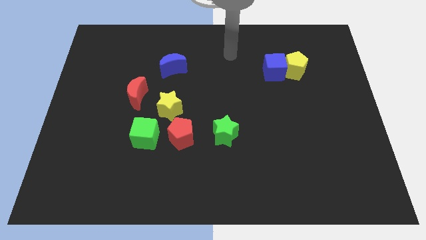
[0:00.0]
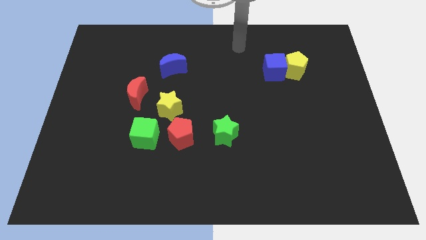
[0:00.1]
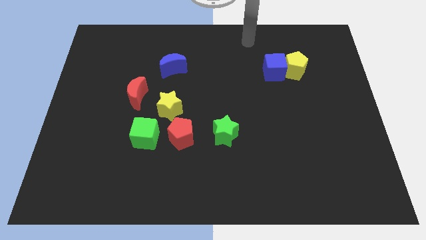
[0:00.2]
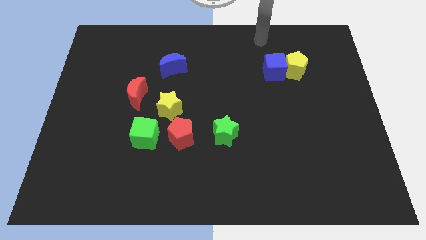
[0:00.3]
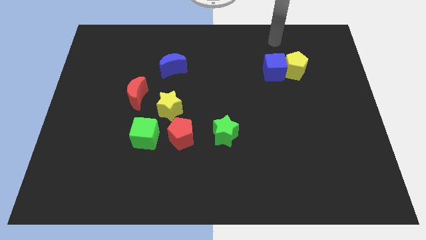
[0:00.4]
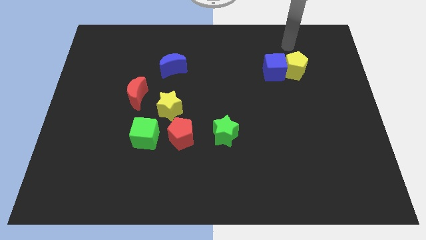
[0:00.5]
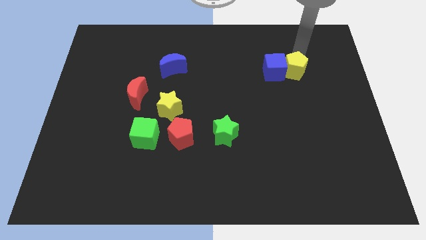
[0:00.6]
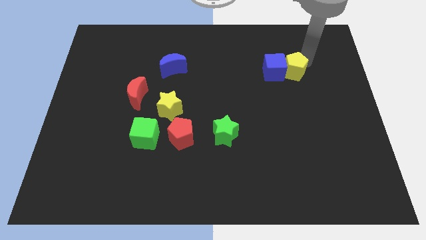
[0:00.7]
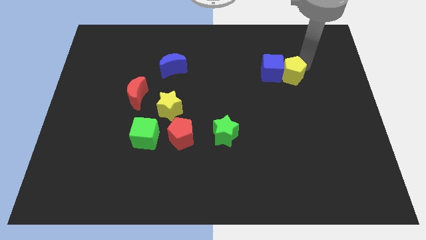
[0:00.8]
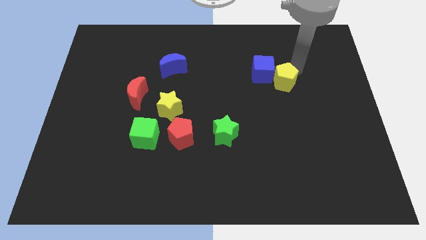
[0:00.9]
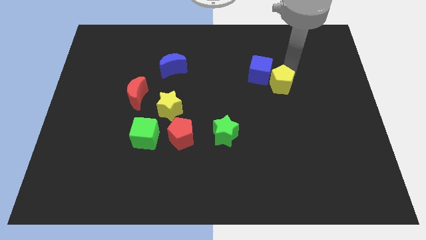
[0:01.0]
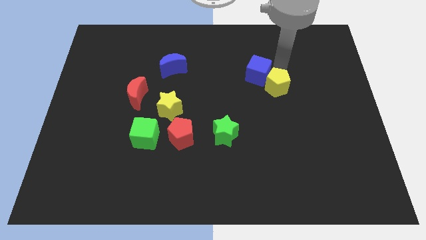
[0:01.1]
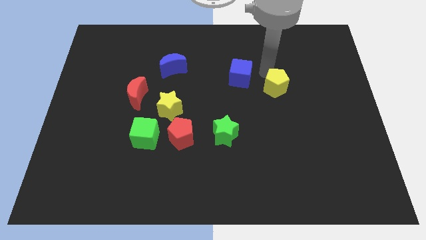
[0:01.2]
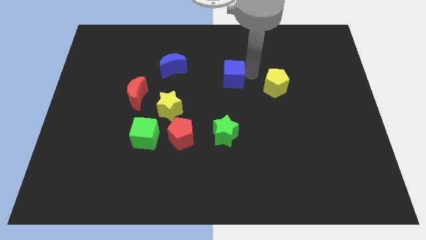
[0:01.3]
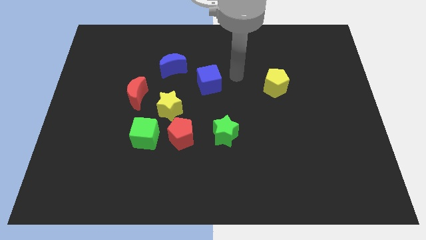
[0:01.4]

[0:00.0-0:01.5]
move the blue cube to the bottom right of the blue moon

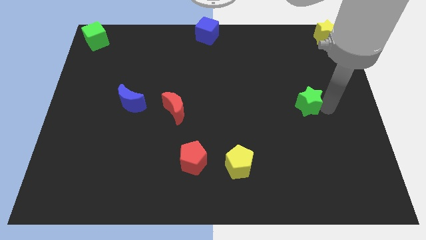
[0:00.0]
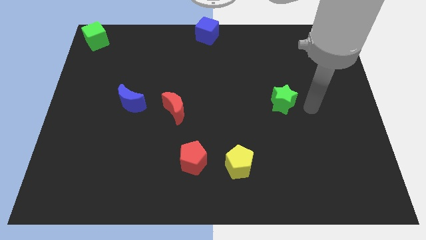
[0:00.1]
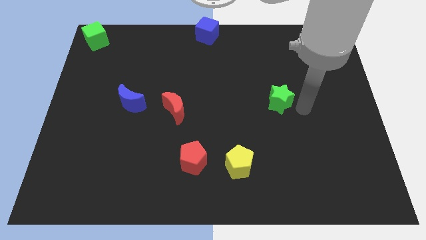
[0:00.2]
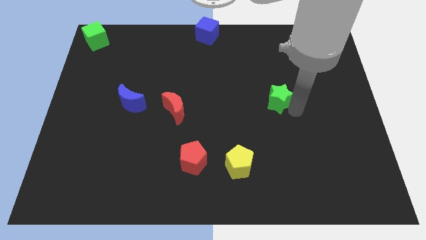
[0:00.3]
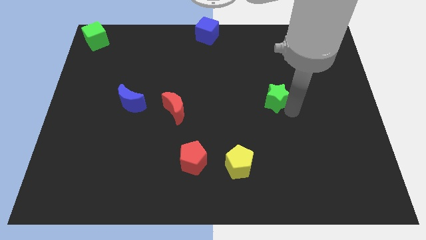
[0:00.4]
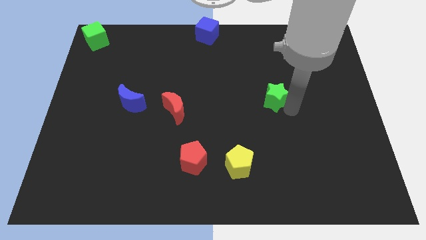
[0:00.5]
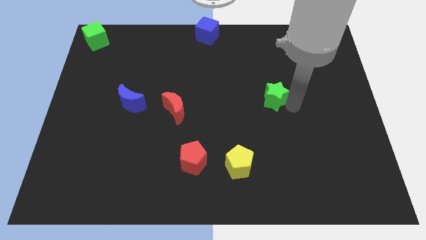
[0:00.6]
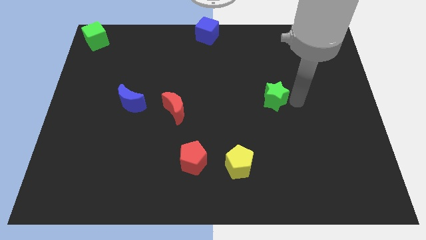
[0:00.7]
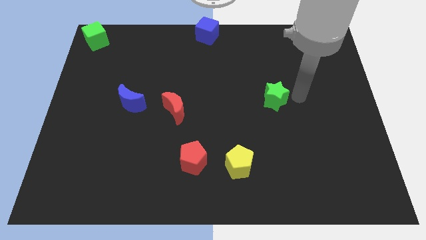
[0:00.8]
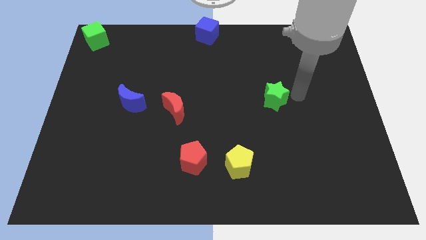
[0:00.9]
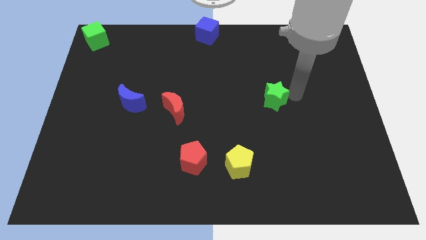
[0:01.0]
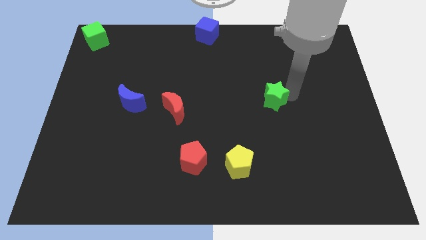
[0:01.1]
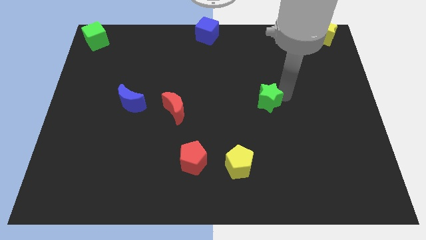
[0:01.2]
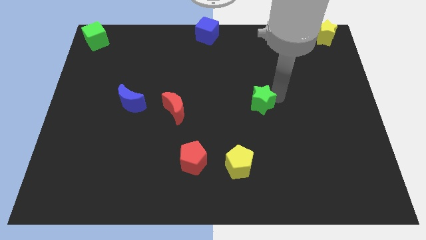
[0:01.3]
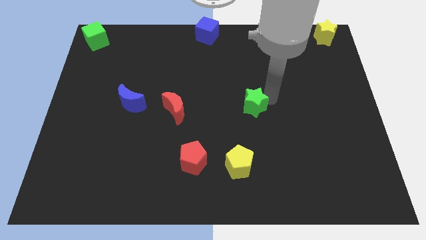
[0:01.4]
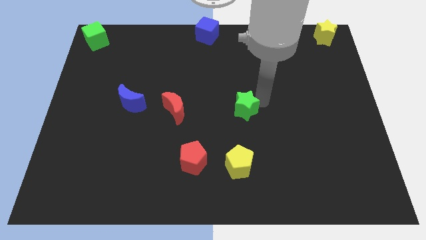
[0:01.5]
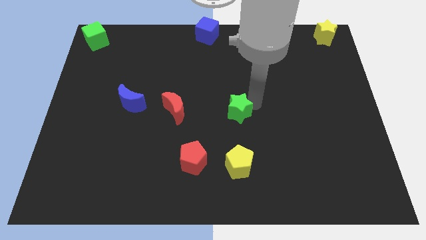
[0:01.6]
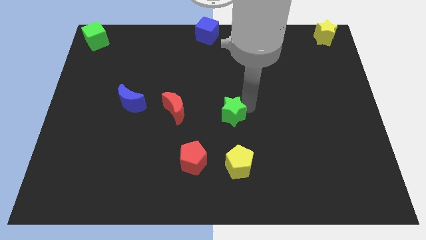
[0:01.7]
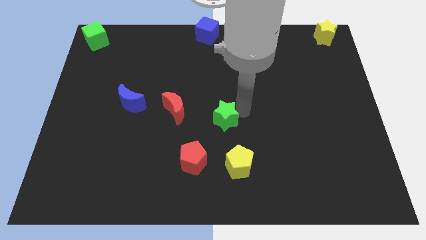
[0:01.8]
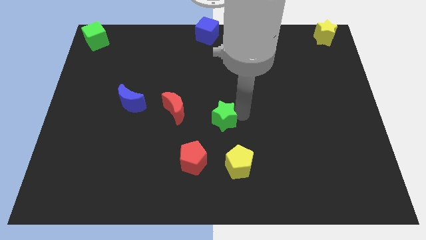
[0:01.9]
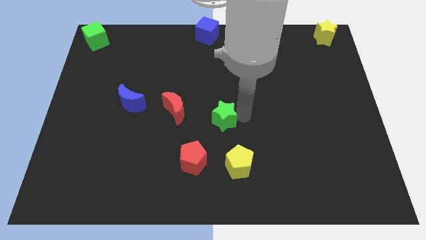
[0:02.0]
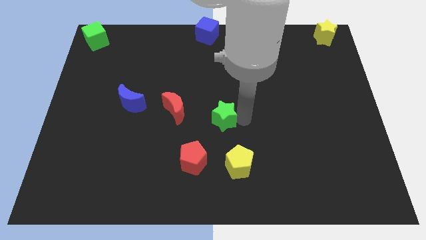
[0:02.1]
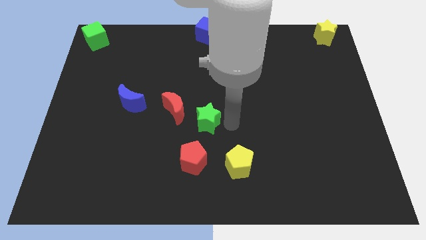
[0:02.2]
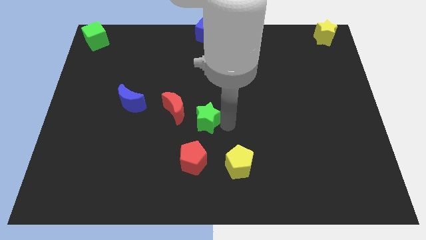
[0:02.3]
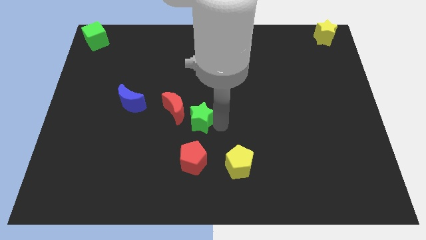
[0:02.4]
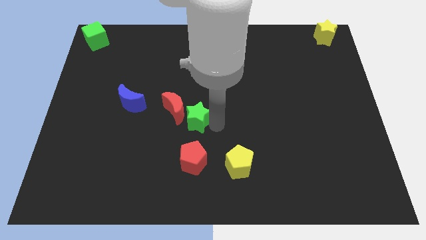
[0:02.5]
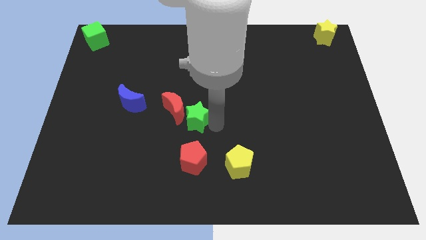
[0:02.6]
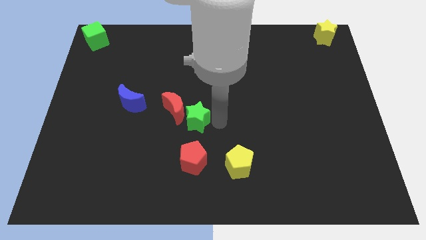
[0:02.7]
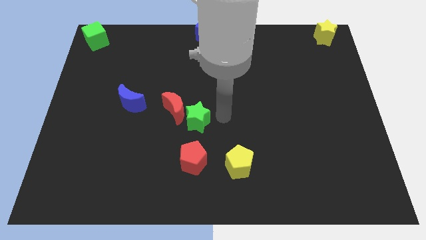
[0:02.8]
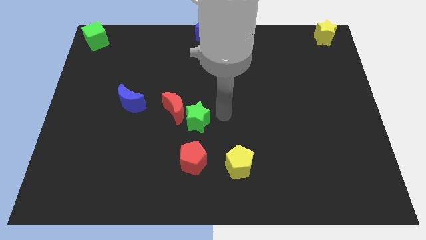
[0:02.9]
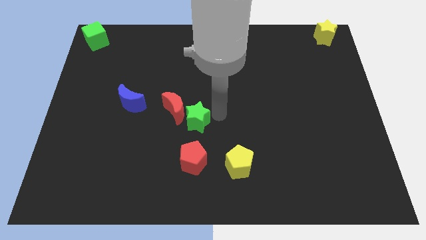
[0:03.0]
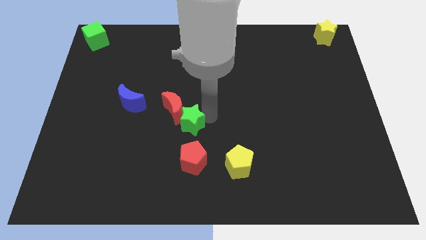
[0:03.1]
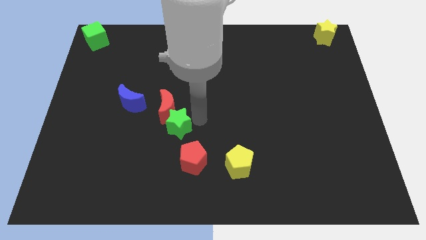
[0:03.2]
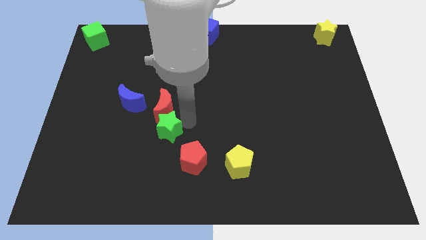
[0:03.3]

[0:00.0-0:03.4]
place green star in between the red moon and red pentagon

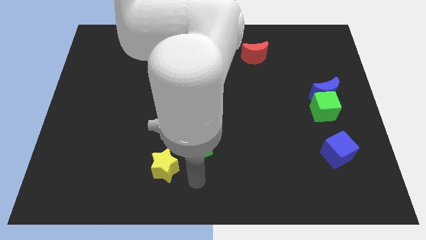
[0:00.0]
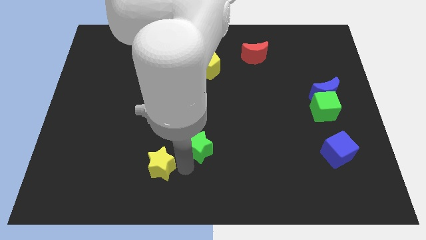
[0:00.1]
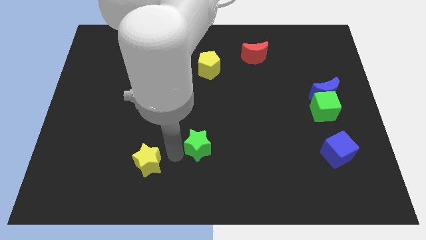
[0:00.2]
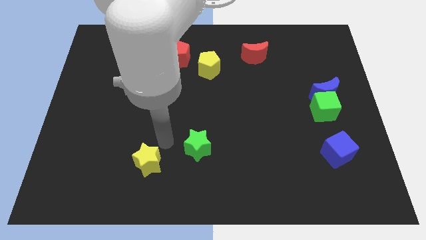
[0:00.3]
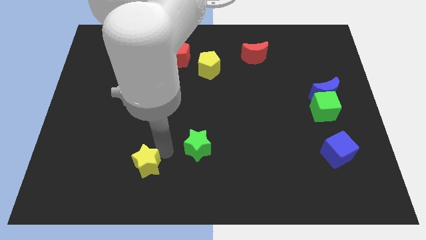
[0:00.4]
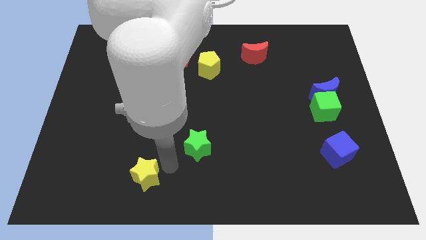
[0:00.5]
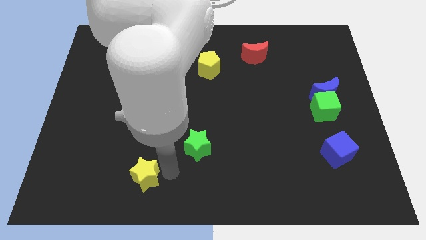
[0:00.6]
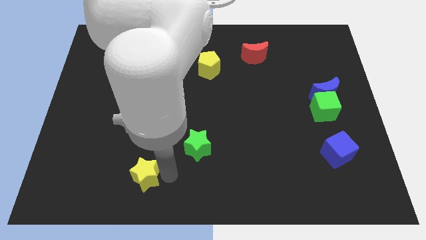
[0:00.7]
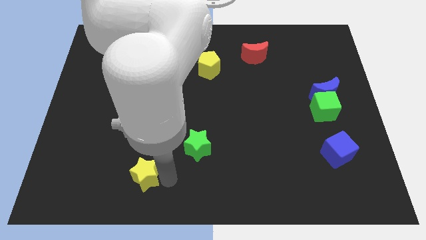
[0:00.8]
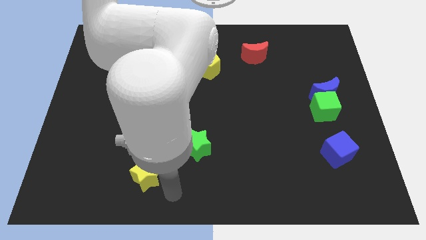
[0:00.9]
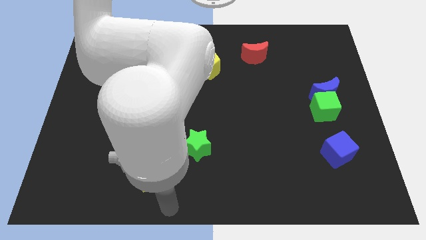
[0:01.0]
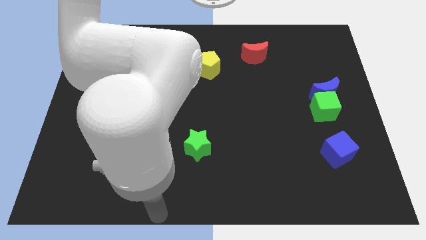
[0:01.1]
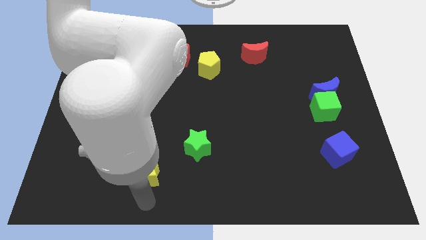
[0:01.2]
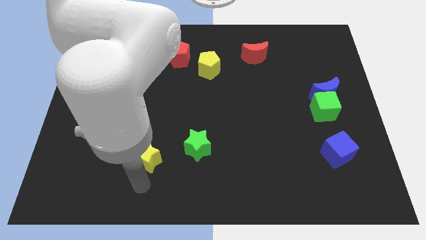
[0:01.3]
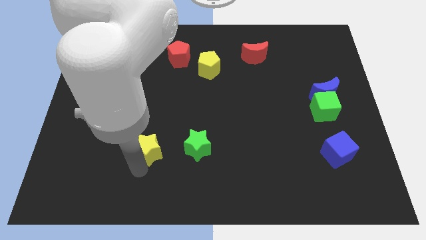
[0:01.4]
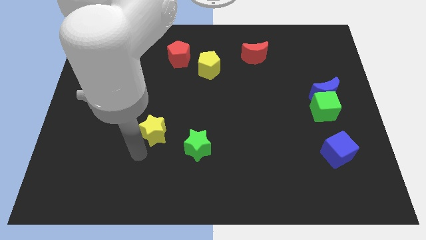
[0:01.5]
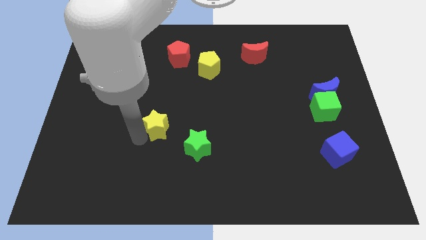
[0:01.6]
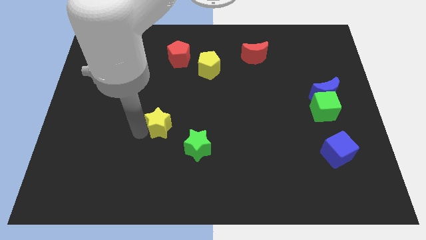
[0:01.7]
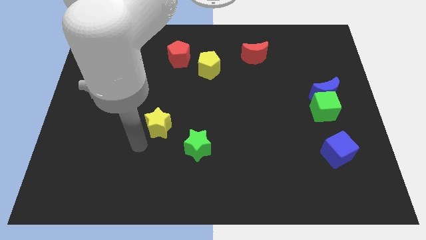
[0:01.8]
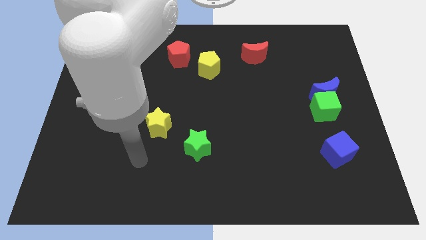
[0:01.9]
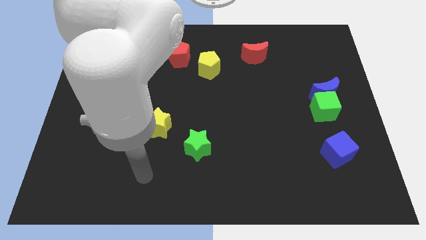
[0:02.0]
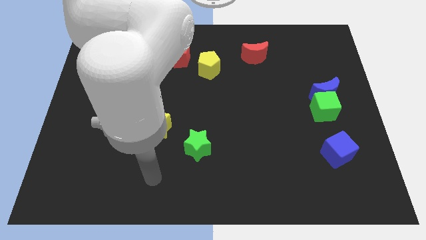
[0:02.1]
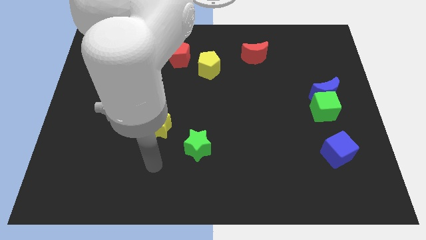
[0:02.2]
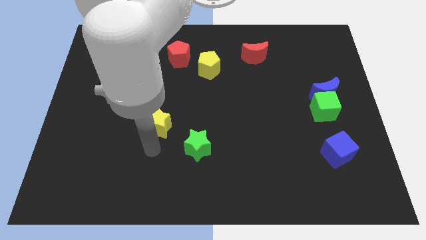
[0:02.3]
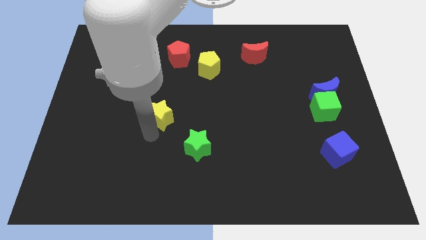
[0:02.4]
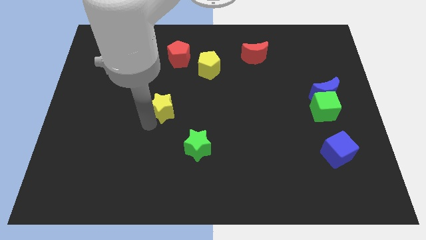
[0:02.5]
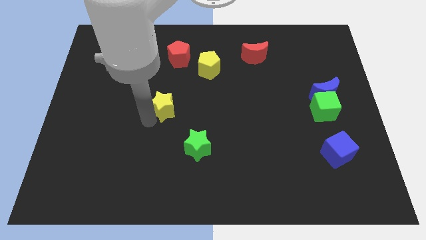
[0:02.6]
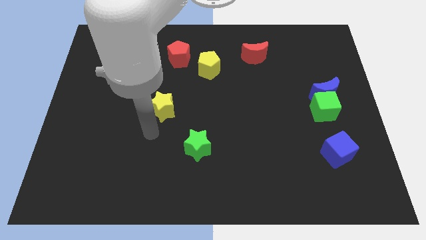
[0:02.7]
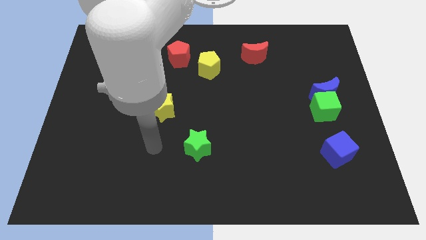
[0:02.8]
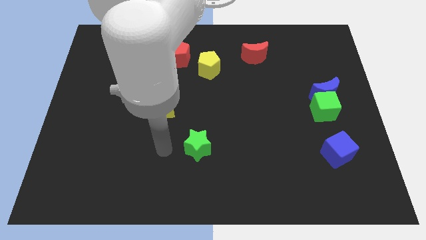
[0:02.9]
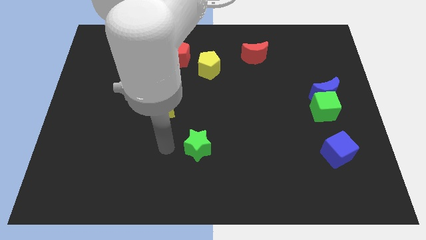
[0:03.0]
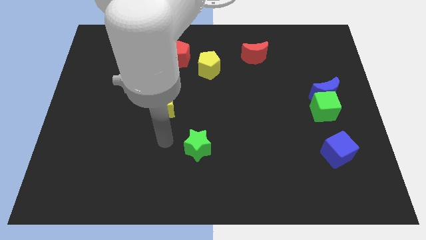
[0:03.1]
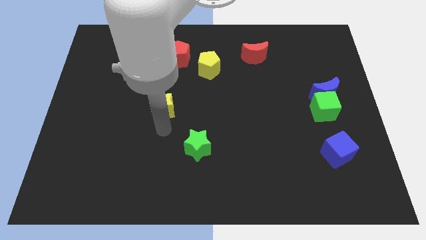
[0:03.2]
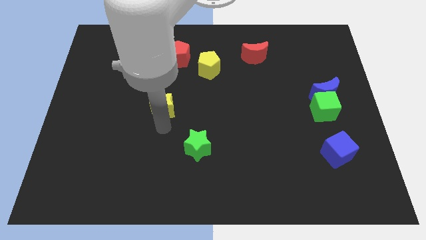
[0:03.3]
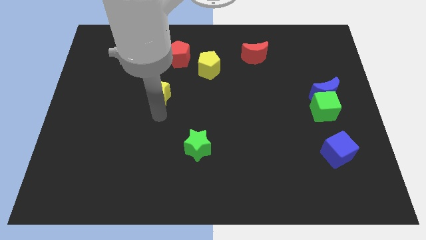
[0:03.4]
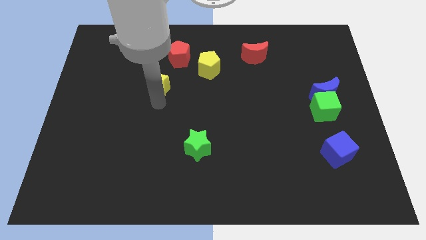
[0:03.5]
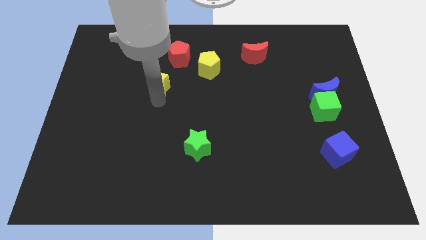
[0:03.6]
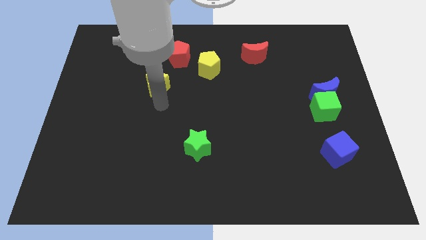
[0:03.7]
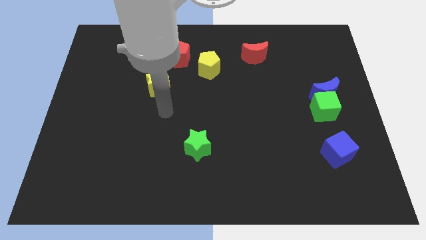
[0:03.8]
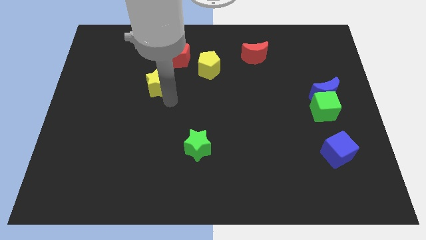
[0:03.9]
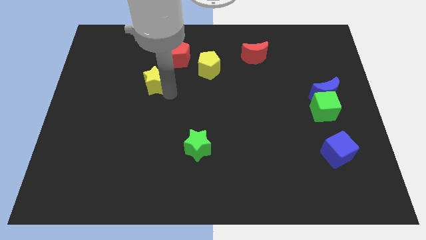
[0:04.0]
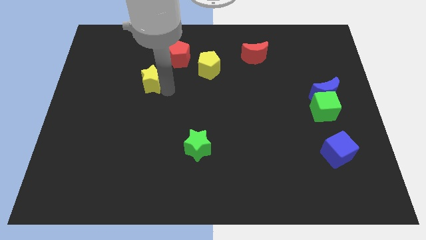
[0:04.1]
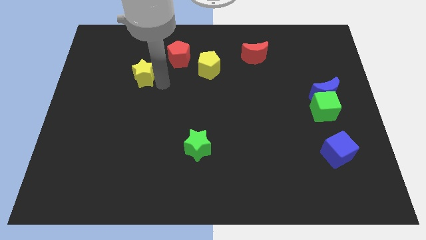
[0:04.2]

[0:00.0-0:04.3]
push the yellow star towards the red pentagon
